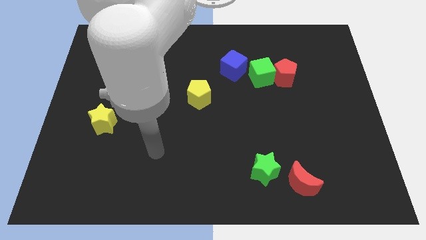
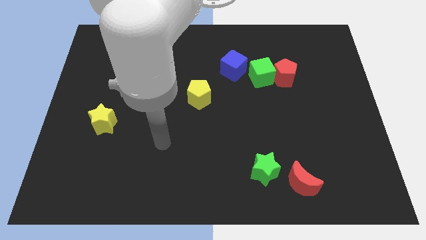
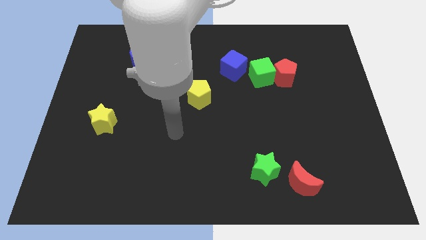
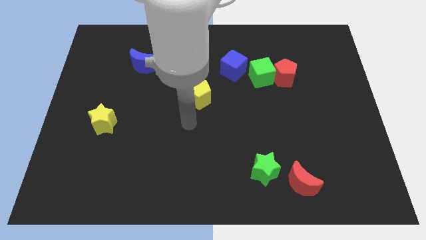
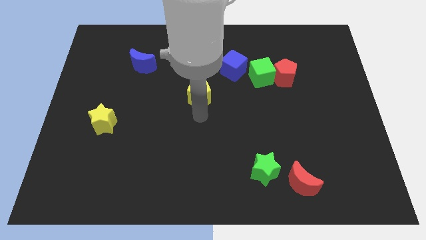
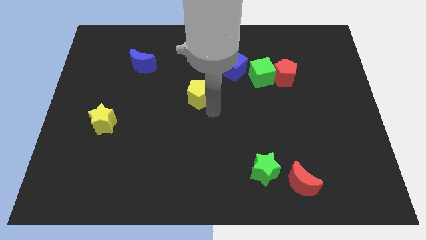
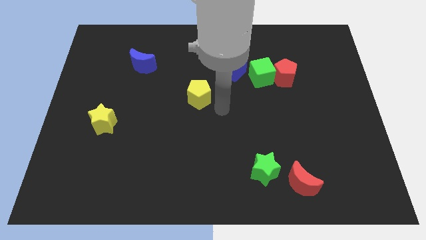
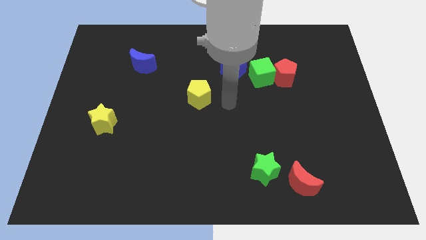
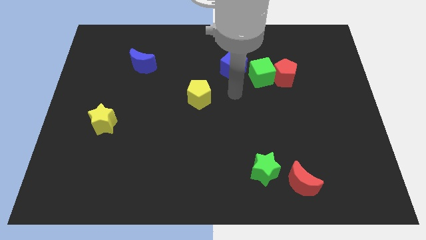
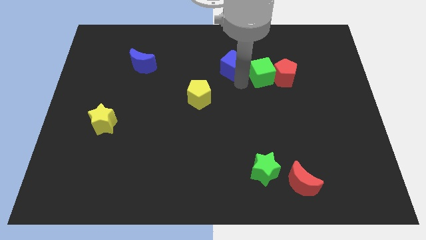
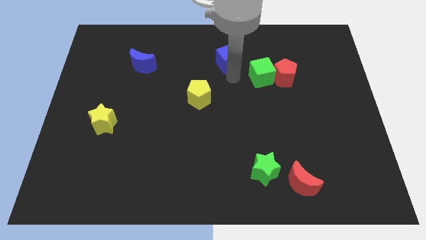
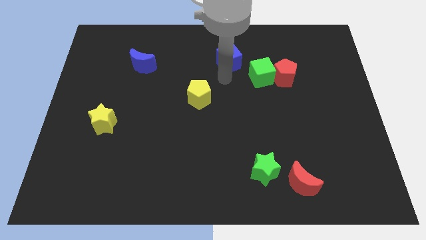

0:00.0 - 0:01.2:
slightly push the blue cube to the top

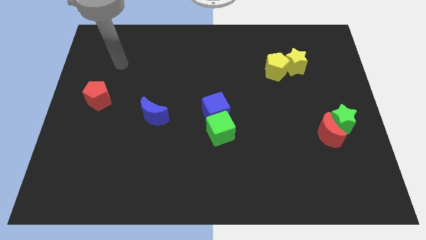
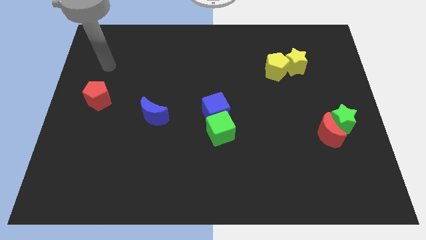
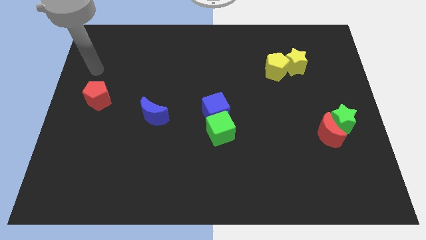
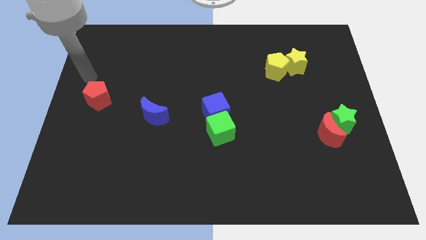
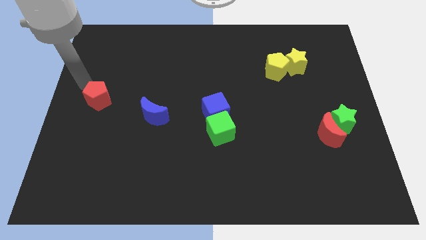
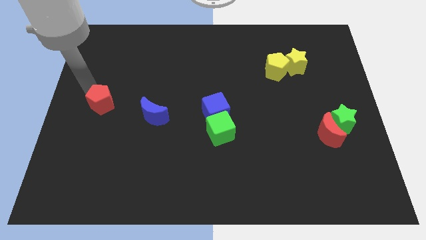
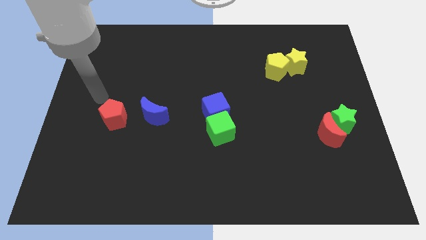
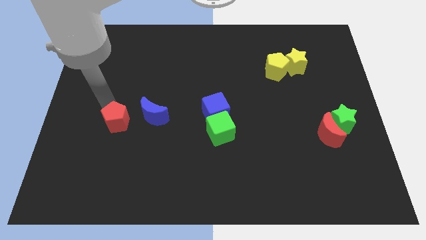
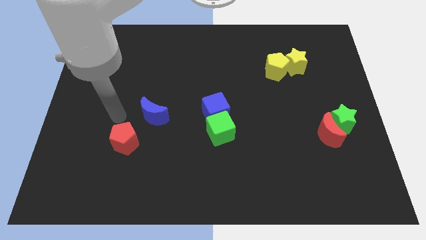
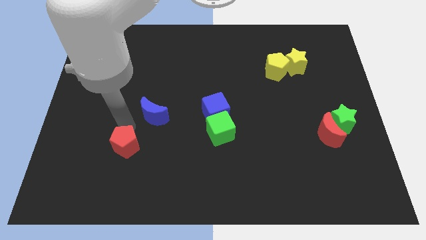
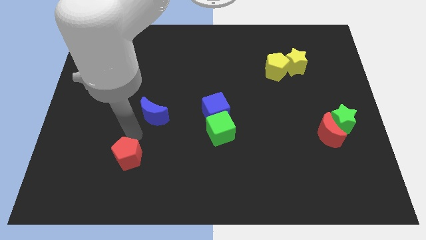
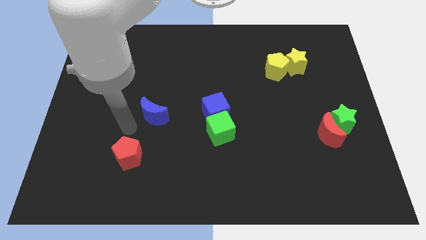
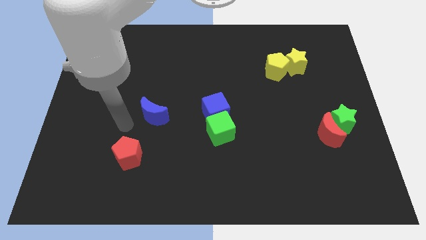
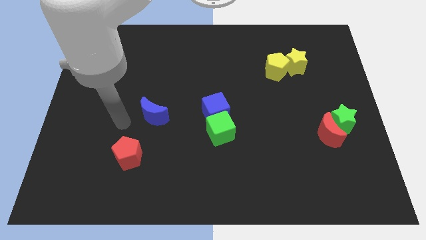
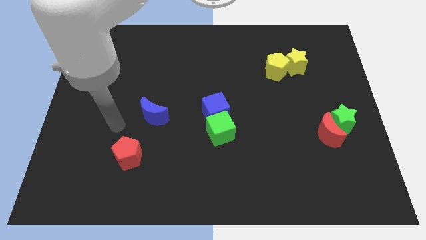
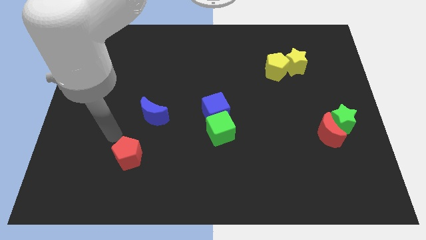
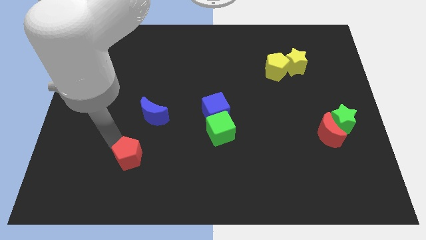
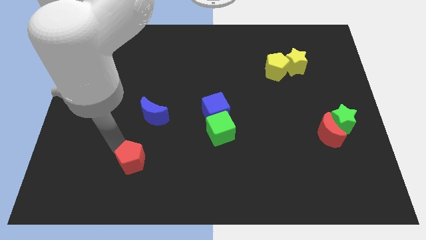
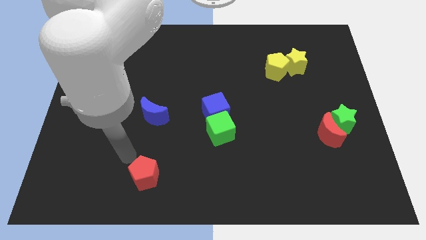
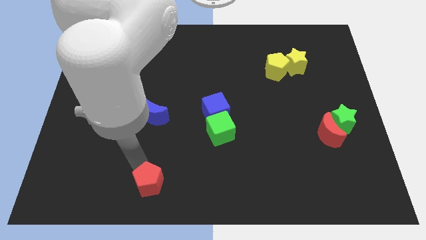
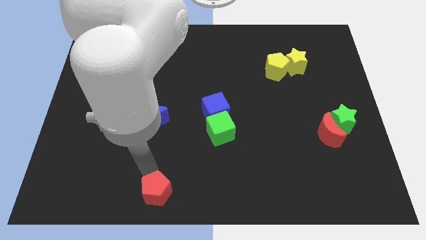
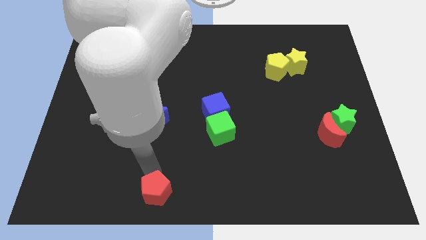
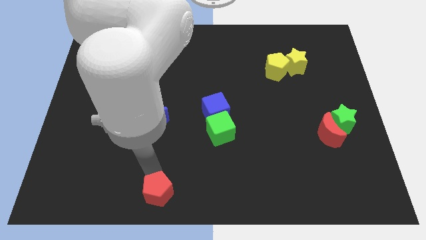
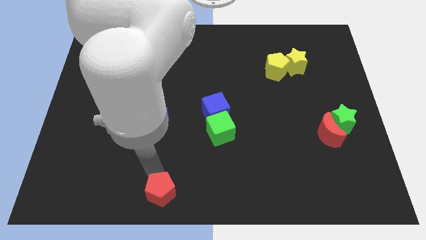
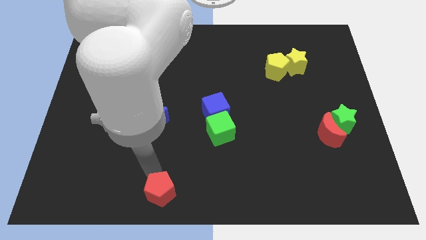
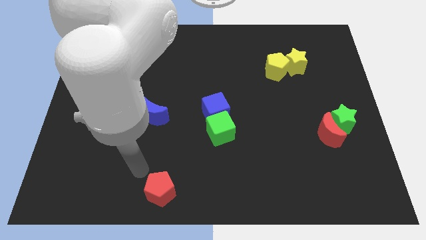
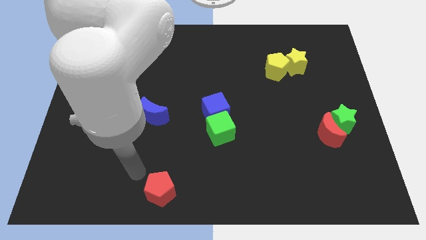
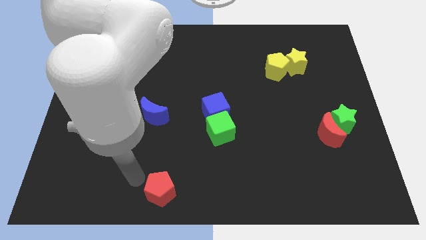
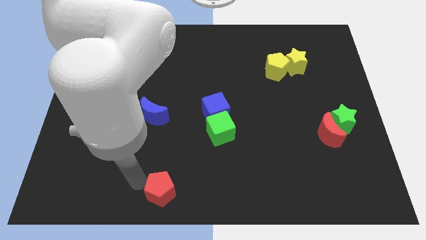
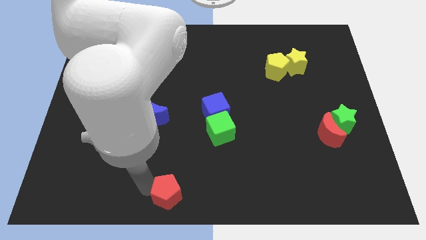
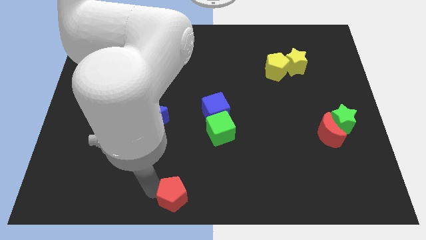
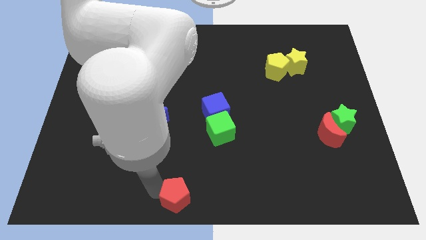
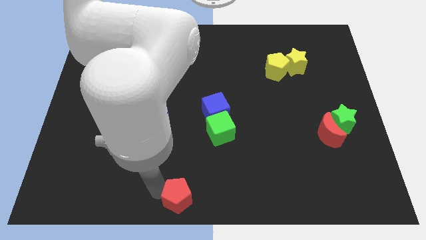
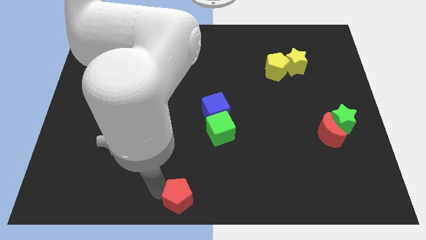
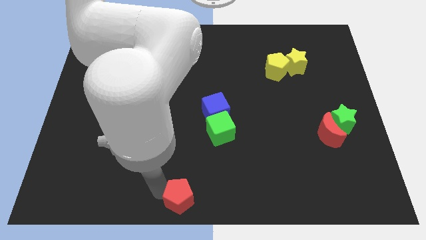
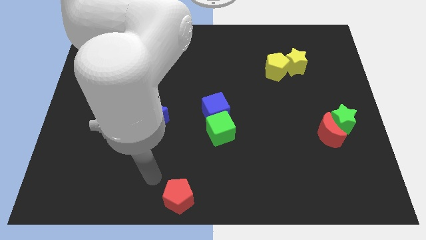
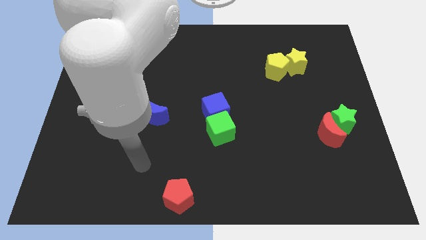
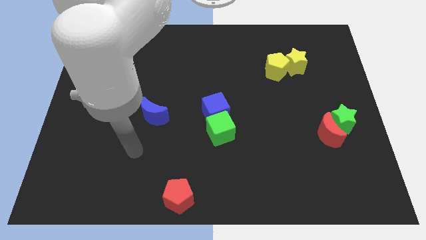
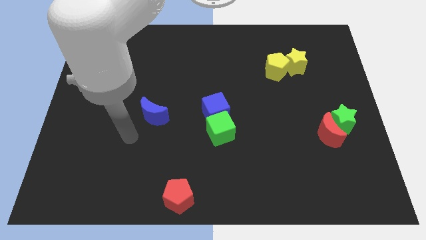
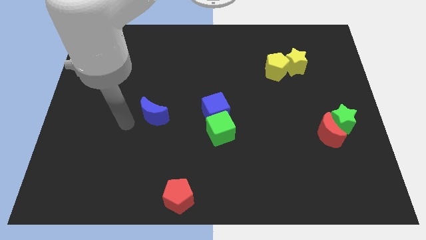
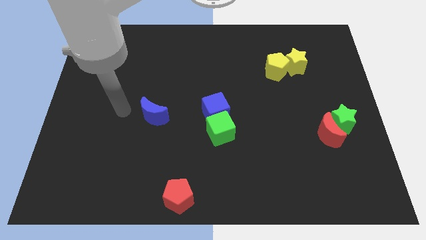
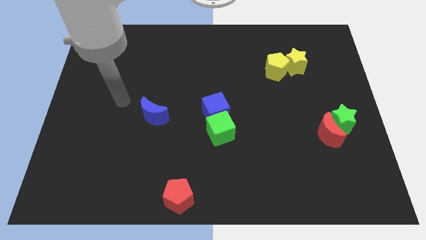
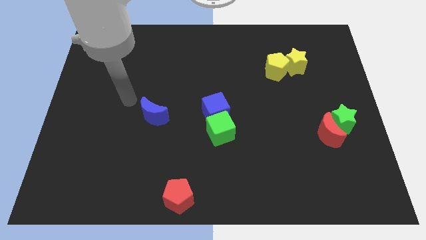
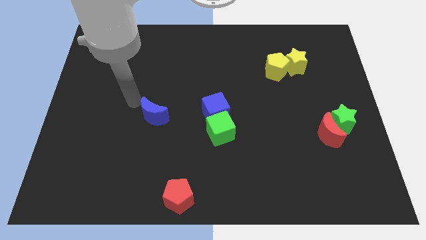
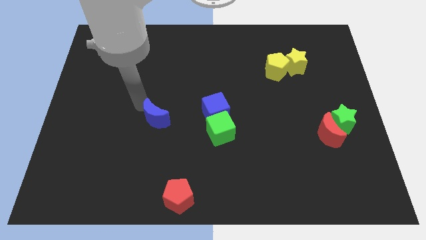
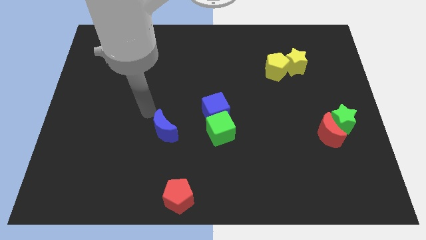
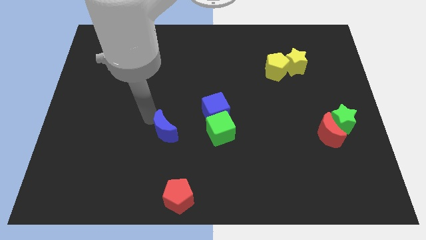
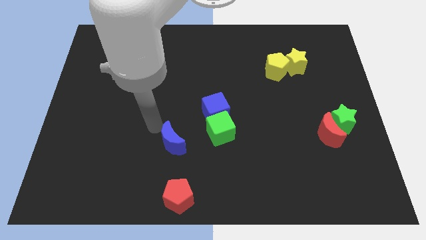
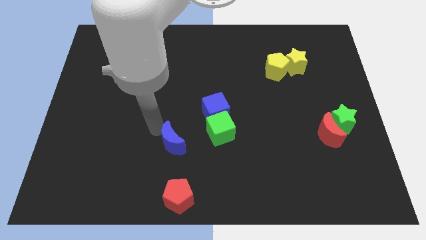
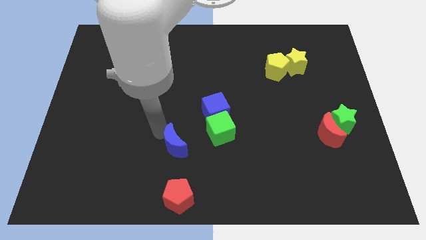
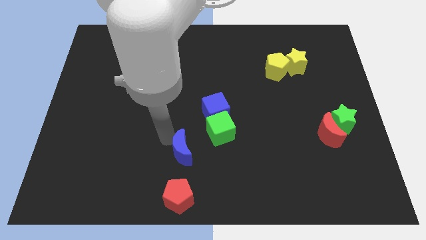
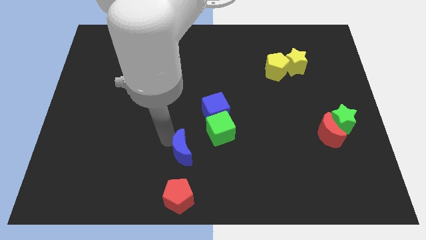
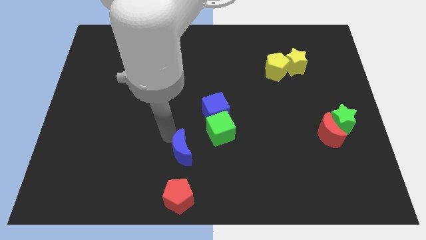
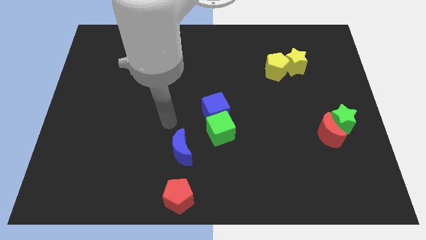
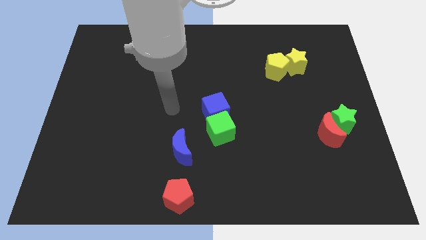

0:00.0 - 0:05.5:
move the blue moon to the bottom center near to the red pentagon

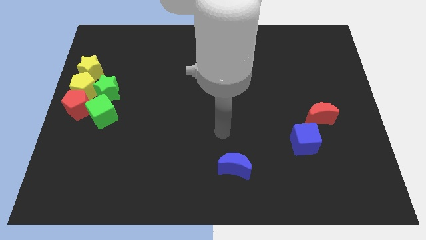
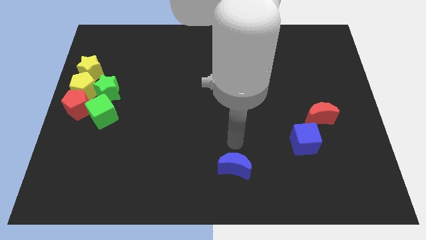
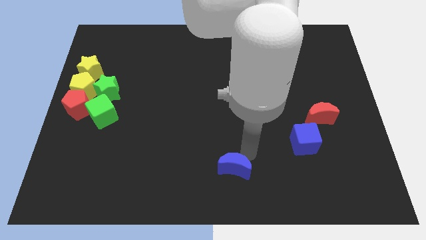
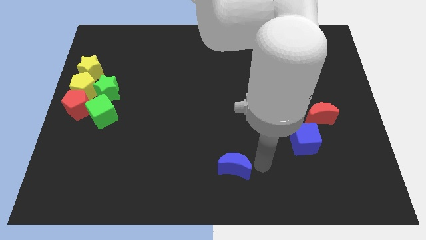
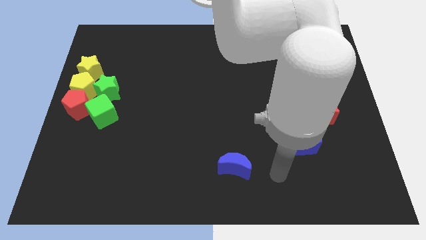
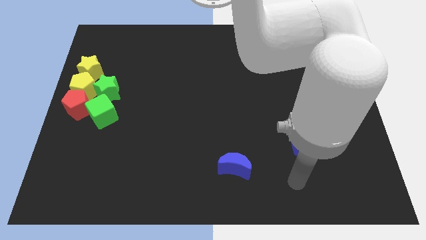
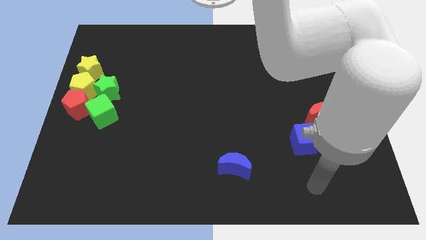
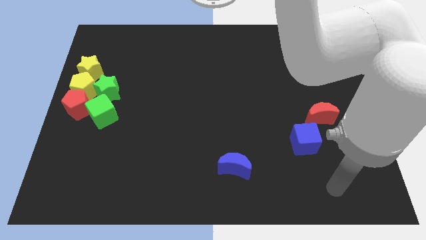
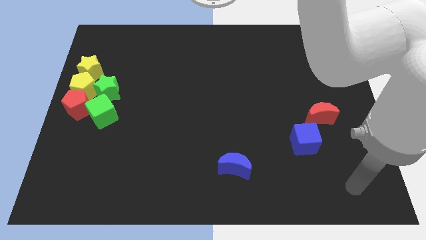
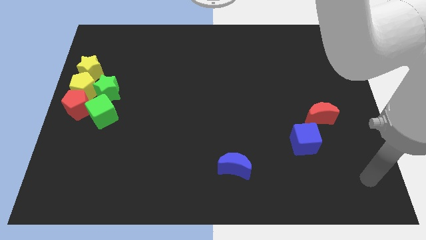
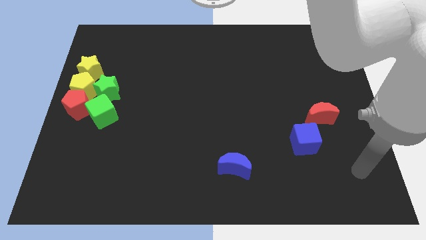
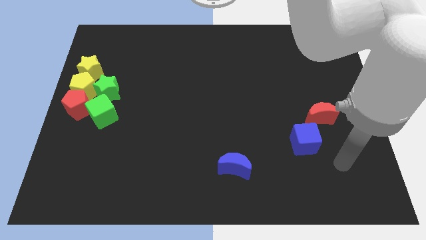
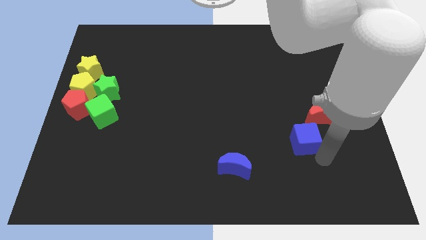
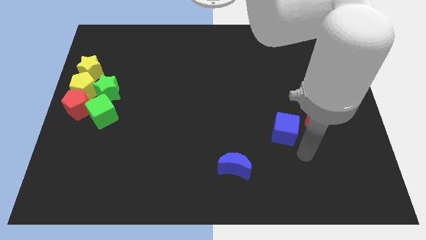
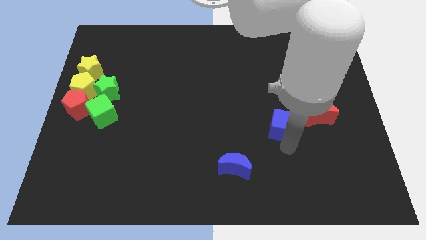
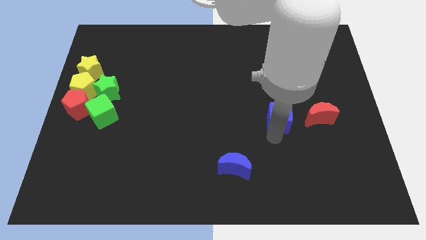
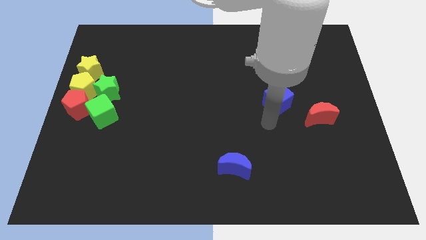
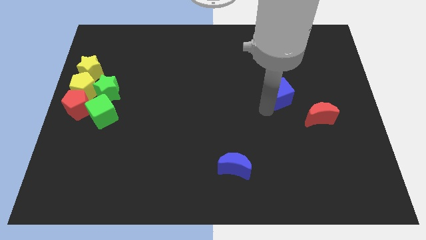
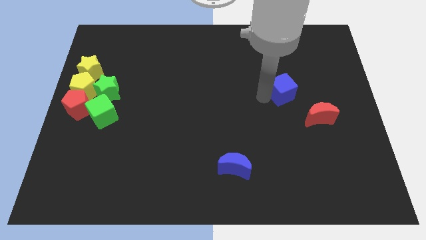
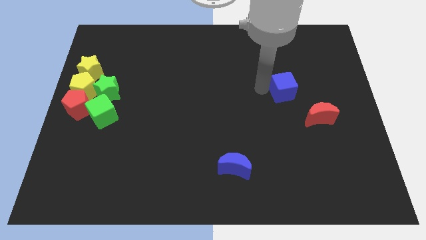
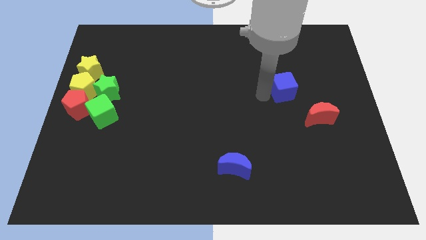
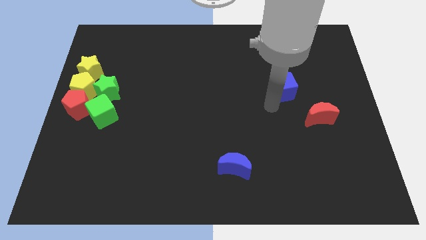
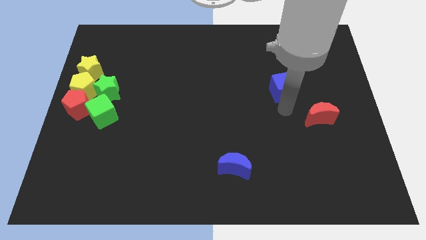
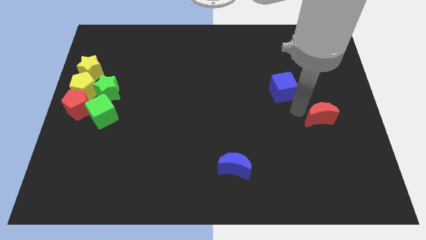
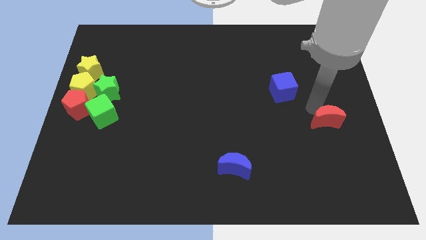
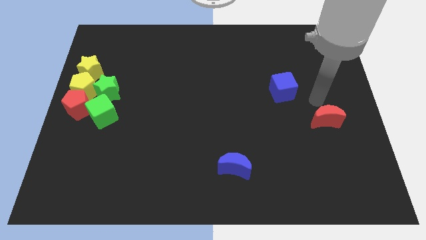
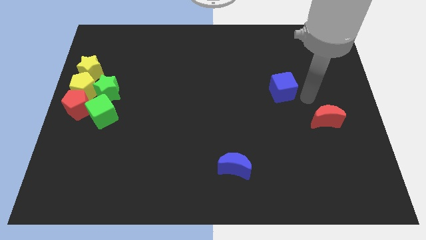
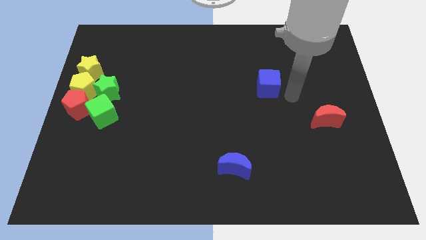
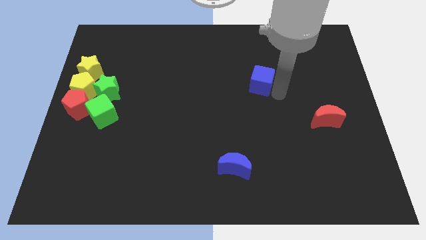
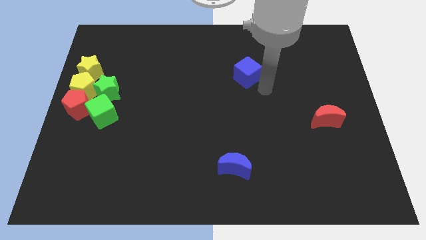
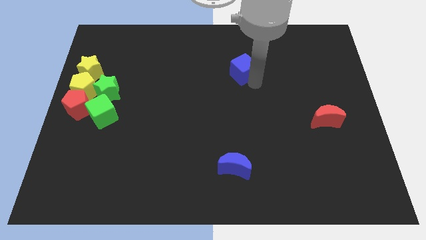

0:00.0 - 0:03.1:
separate blue cube from red moon
